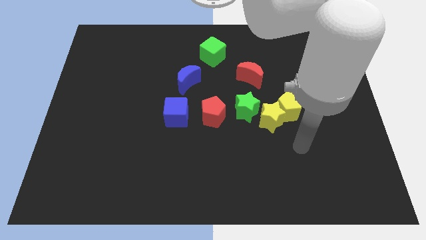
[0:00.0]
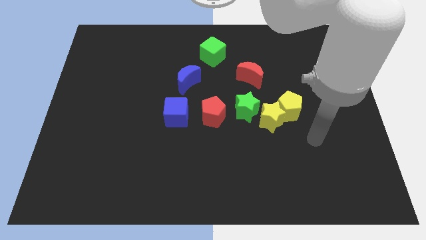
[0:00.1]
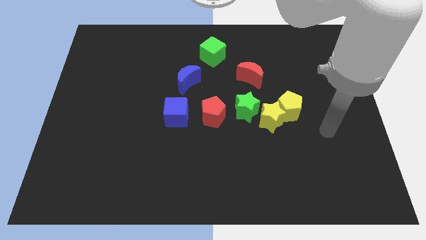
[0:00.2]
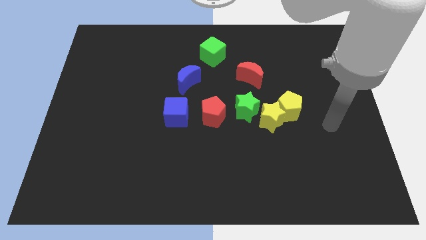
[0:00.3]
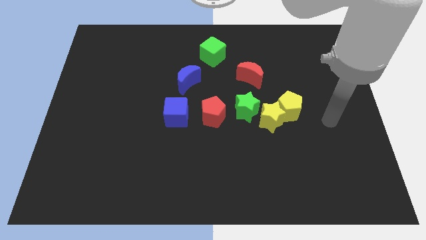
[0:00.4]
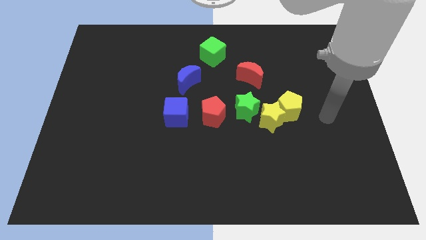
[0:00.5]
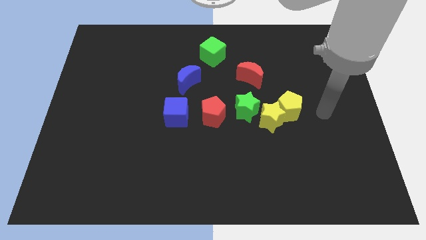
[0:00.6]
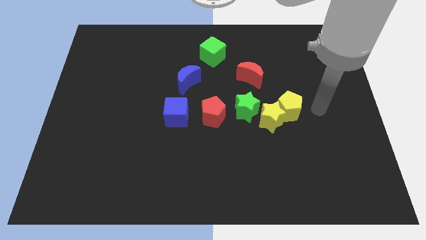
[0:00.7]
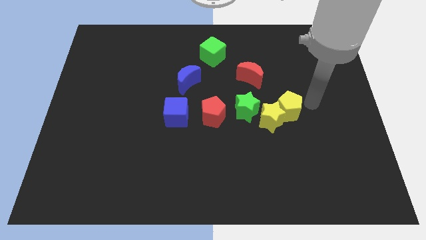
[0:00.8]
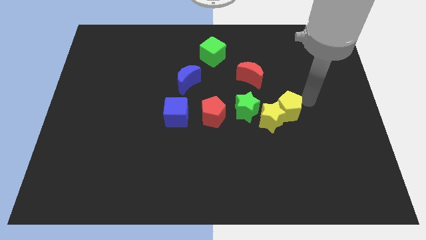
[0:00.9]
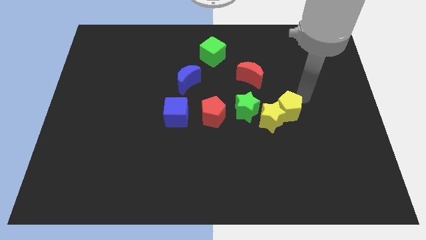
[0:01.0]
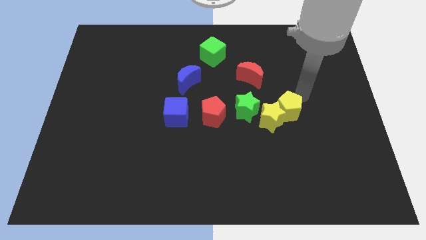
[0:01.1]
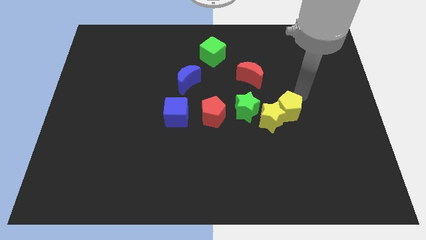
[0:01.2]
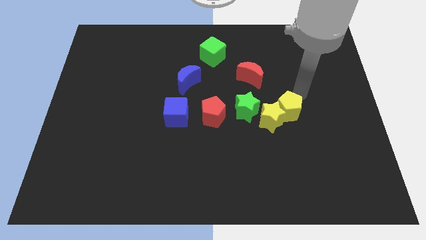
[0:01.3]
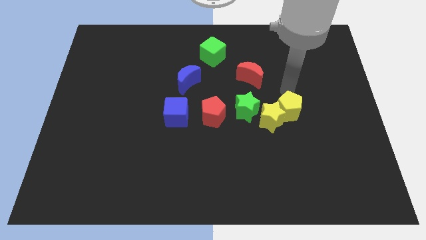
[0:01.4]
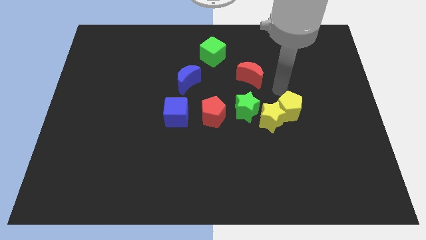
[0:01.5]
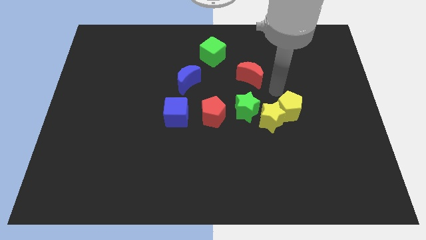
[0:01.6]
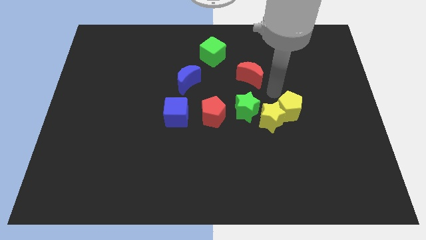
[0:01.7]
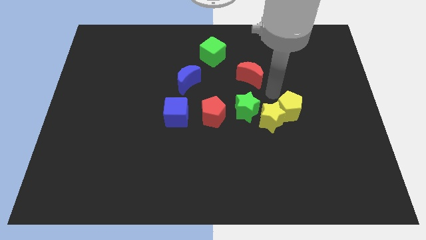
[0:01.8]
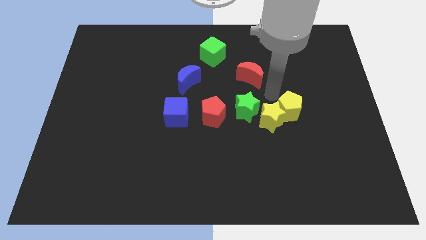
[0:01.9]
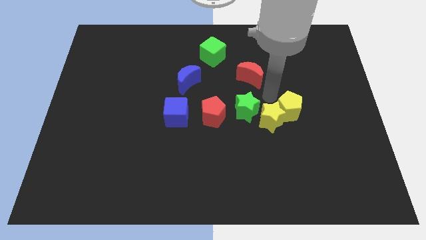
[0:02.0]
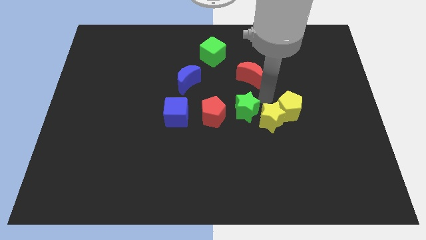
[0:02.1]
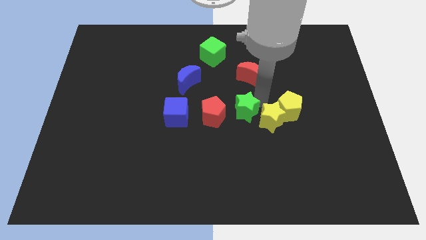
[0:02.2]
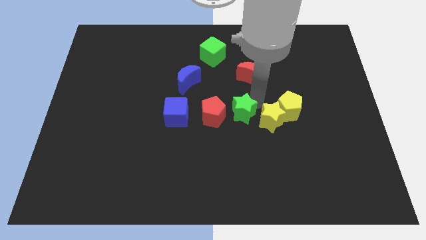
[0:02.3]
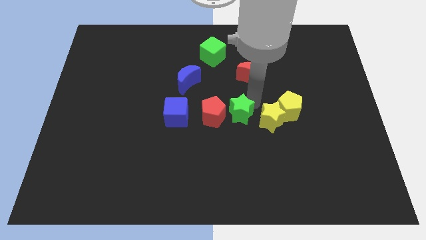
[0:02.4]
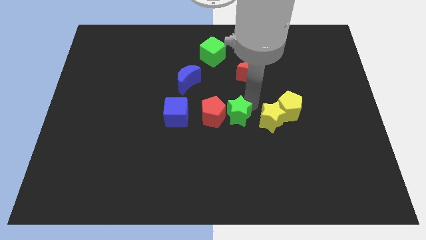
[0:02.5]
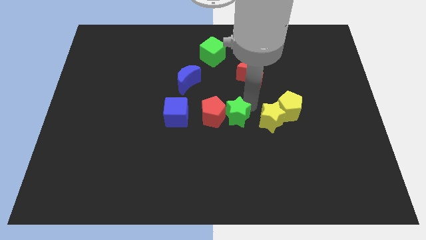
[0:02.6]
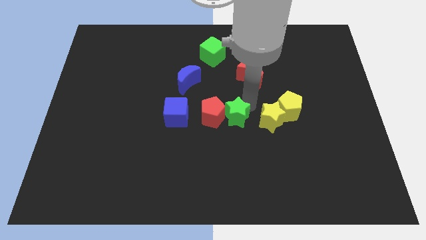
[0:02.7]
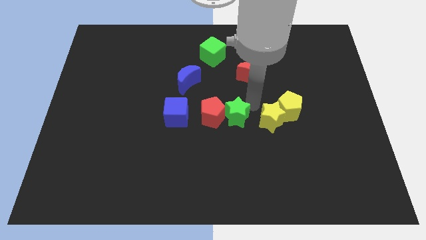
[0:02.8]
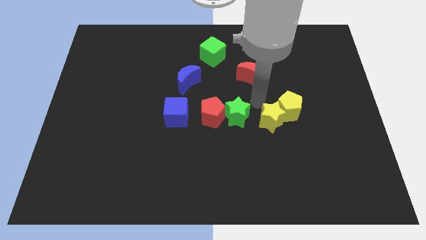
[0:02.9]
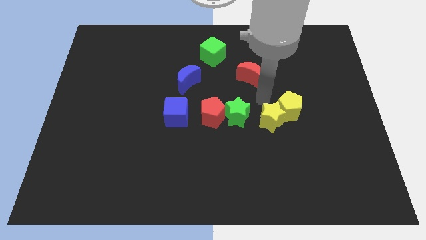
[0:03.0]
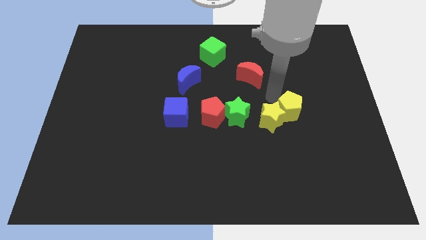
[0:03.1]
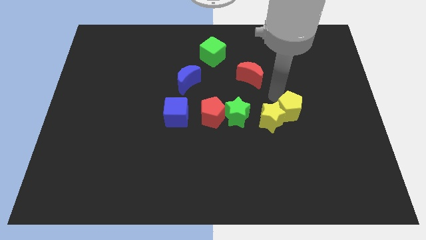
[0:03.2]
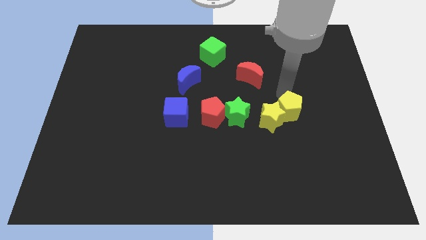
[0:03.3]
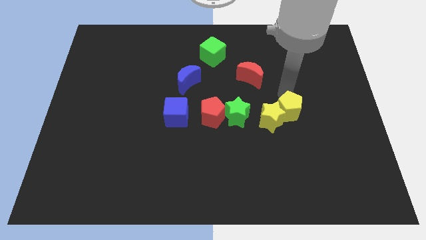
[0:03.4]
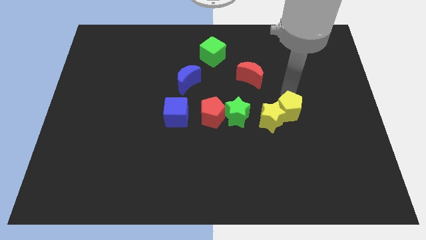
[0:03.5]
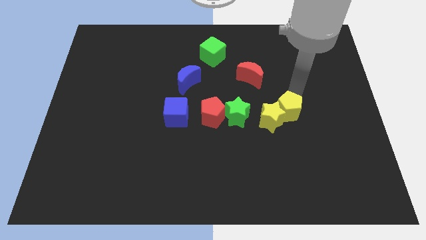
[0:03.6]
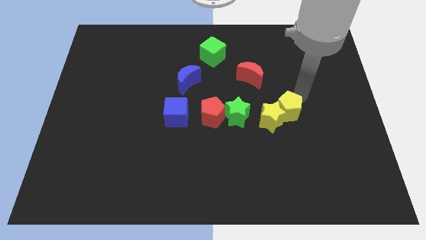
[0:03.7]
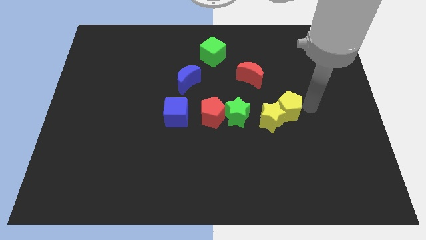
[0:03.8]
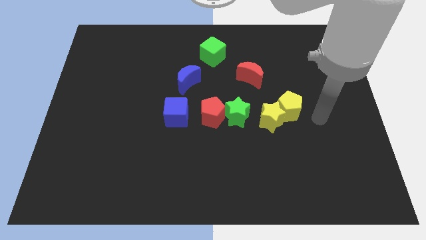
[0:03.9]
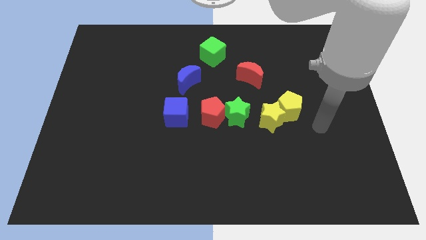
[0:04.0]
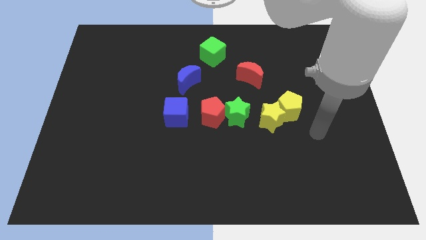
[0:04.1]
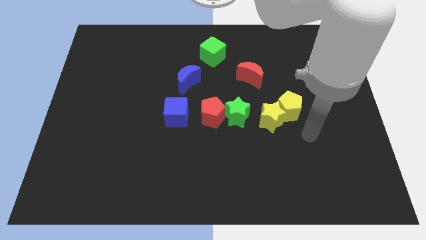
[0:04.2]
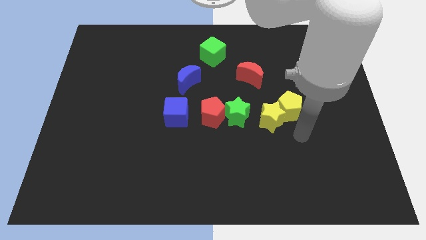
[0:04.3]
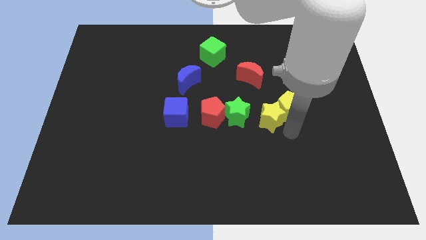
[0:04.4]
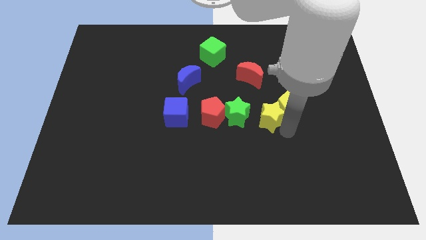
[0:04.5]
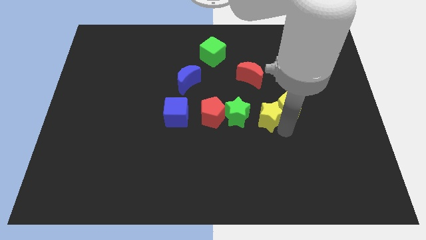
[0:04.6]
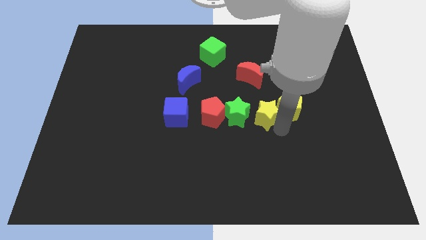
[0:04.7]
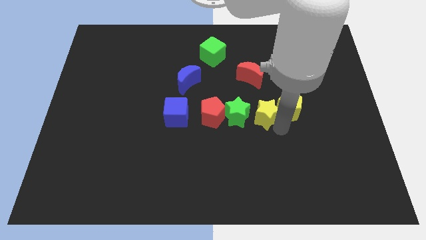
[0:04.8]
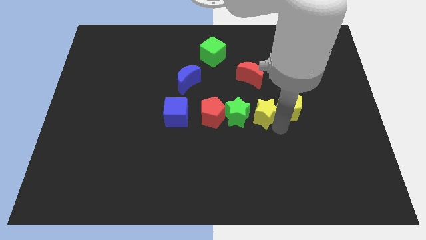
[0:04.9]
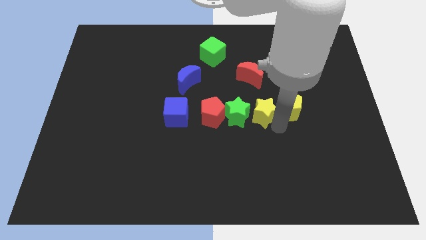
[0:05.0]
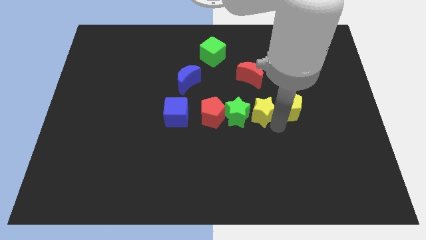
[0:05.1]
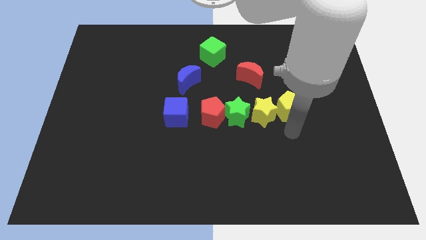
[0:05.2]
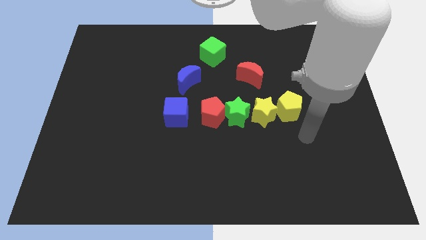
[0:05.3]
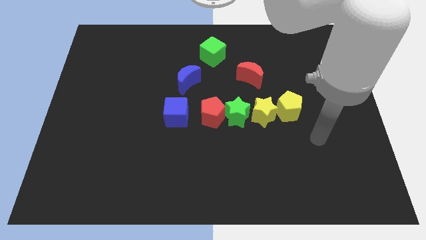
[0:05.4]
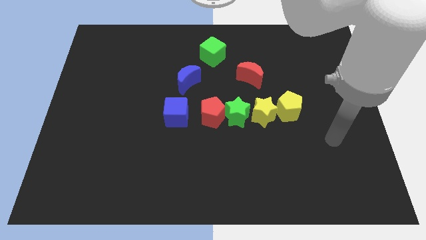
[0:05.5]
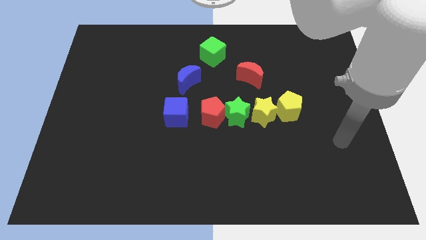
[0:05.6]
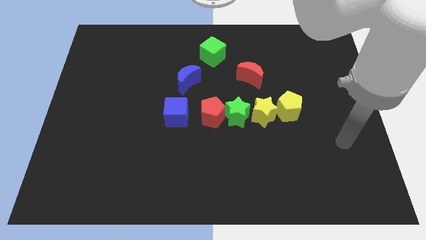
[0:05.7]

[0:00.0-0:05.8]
adjust the yellow and green star in a line

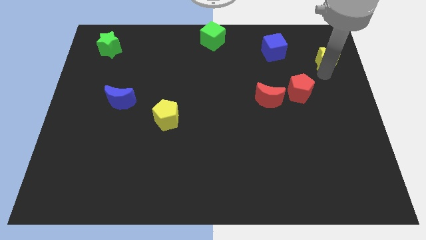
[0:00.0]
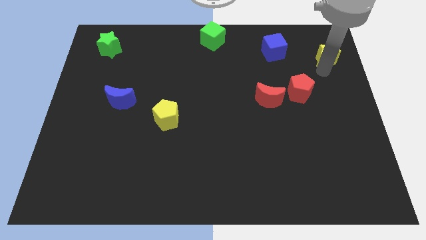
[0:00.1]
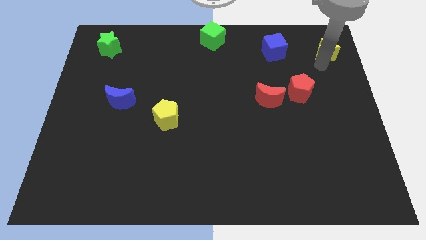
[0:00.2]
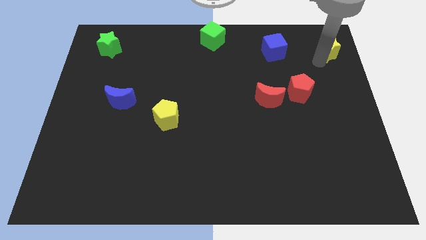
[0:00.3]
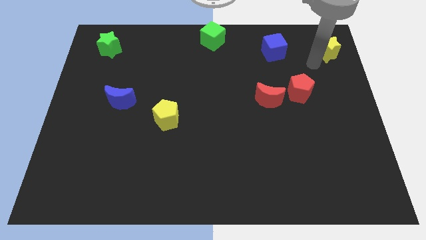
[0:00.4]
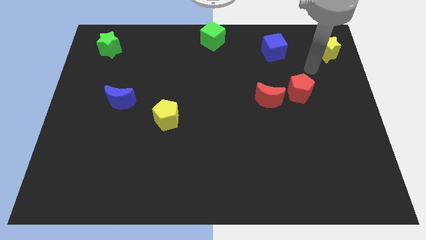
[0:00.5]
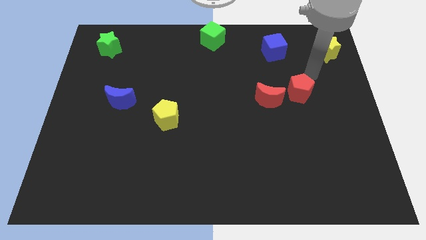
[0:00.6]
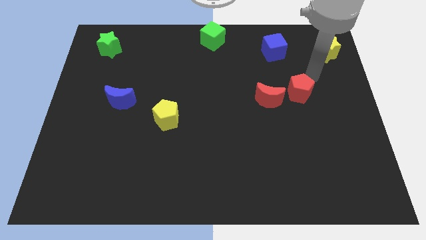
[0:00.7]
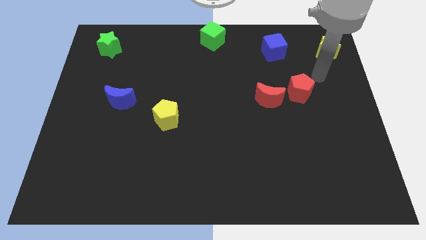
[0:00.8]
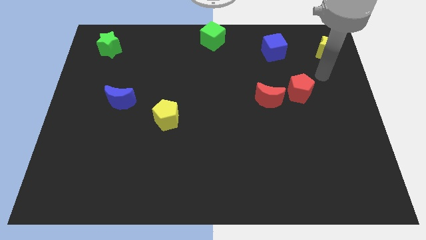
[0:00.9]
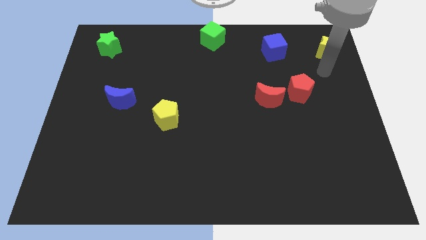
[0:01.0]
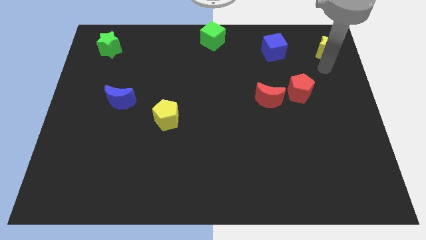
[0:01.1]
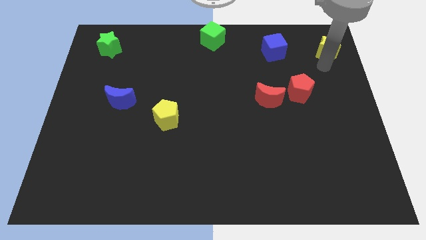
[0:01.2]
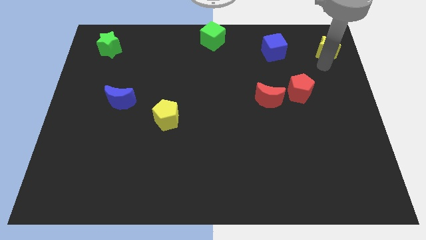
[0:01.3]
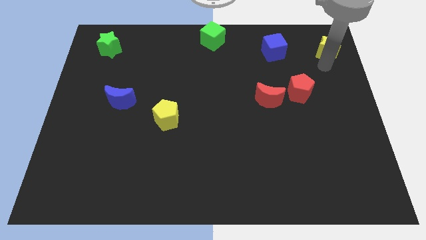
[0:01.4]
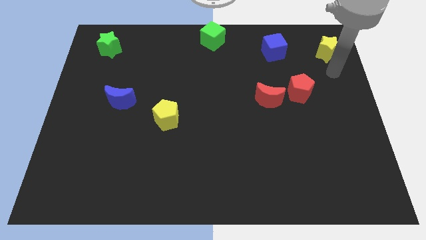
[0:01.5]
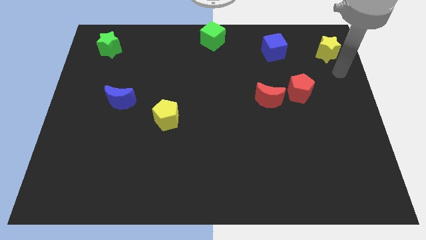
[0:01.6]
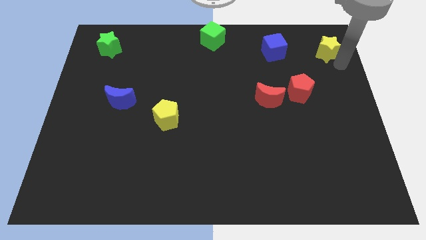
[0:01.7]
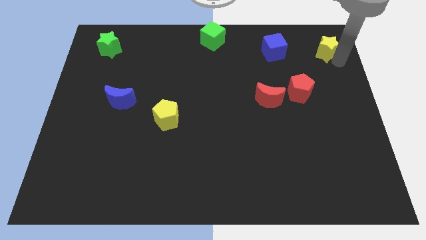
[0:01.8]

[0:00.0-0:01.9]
push yellow star to the top right corner of the board

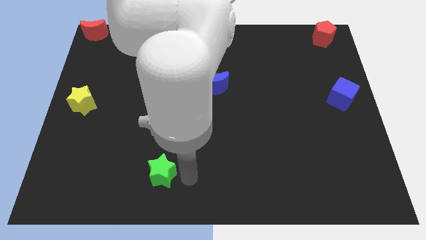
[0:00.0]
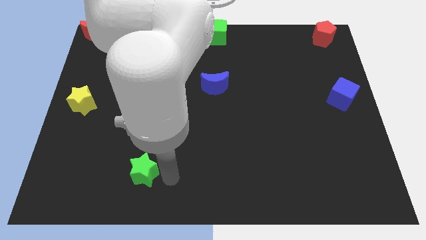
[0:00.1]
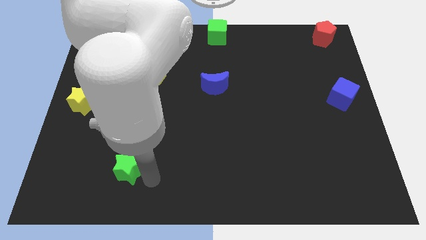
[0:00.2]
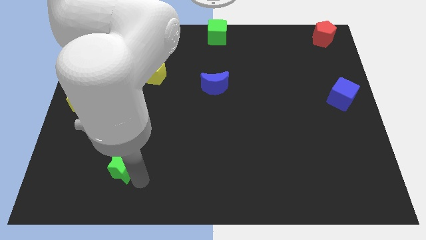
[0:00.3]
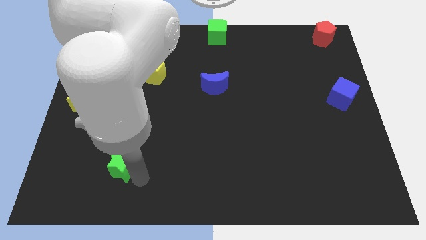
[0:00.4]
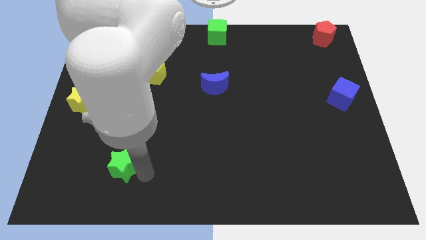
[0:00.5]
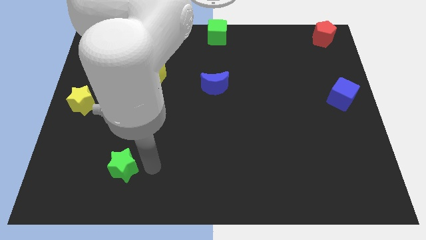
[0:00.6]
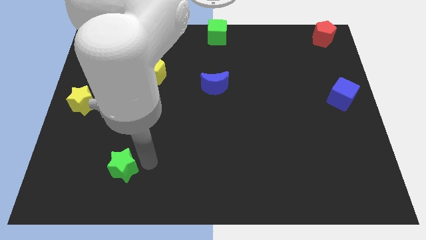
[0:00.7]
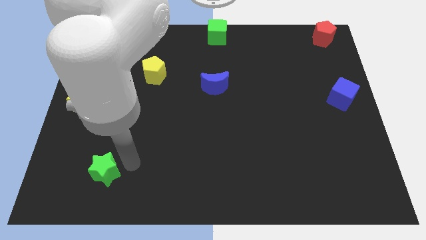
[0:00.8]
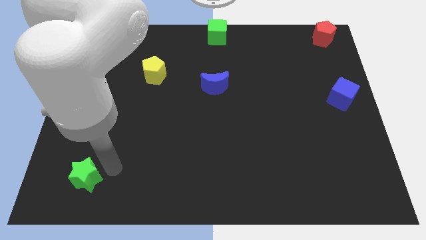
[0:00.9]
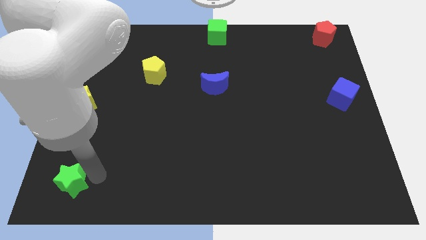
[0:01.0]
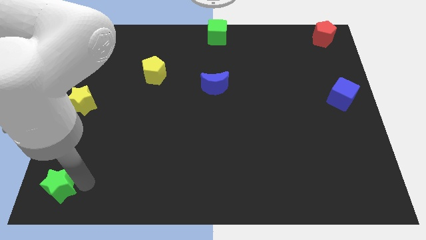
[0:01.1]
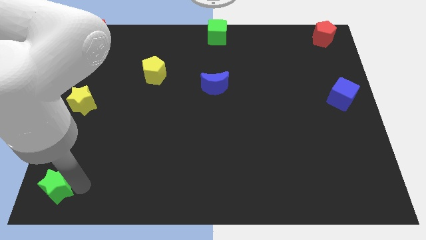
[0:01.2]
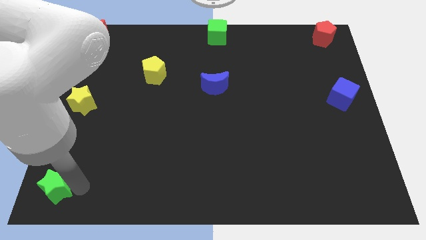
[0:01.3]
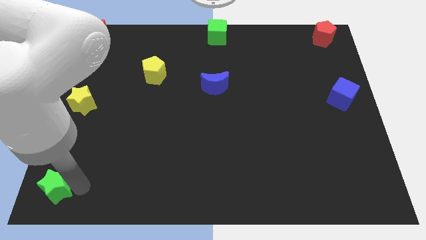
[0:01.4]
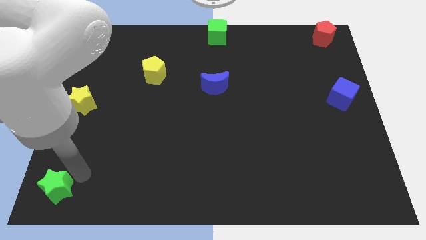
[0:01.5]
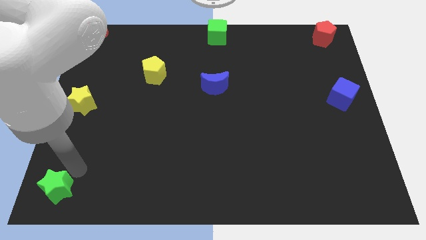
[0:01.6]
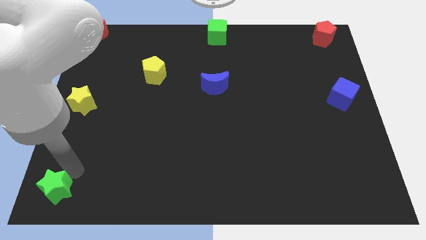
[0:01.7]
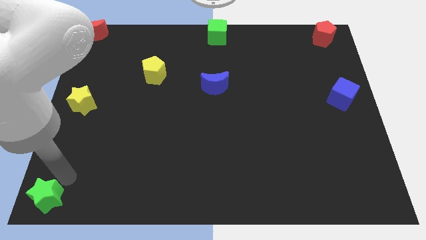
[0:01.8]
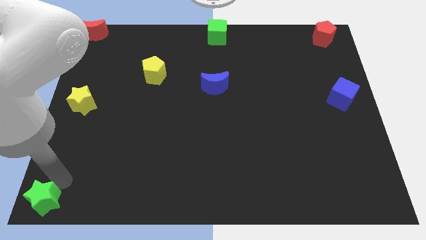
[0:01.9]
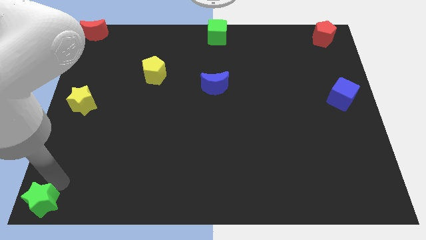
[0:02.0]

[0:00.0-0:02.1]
place green star towards left bottom corner
